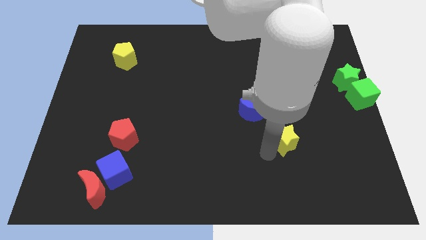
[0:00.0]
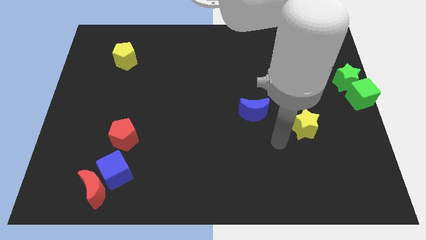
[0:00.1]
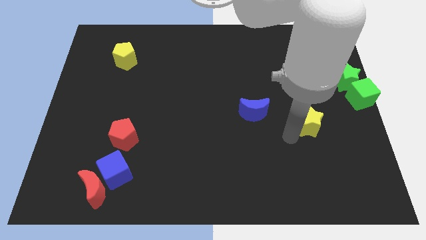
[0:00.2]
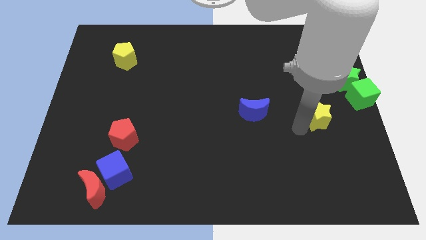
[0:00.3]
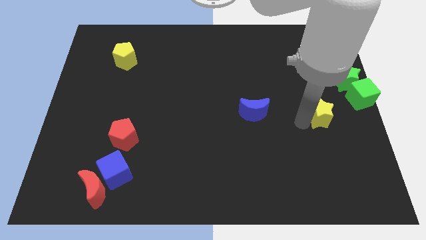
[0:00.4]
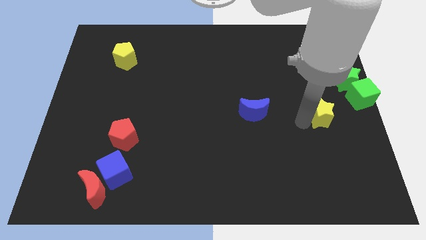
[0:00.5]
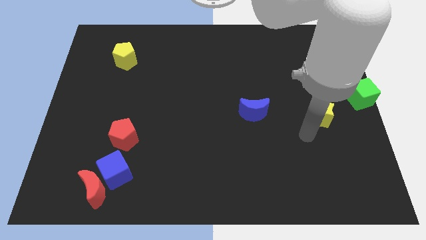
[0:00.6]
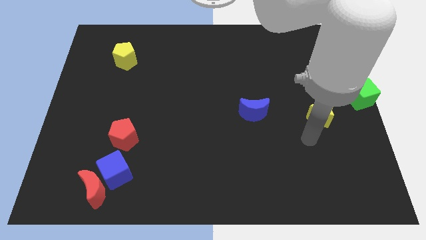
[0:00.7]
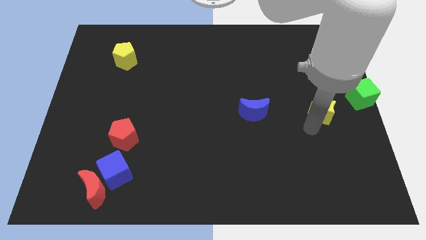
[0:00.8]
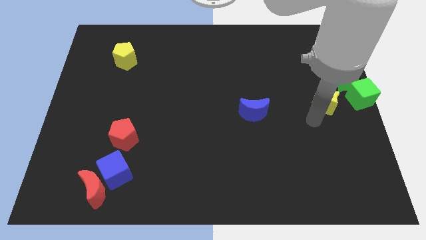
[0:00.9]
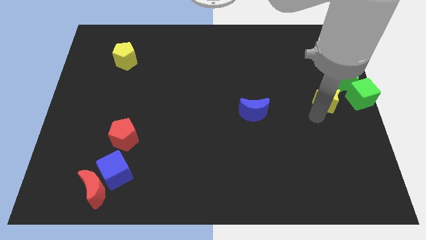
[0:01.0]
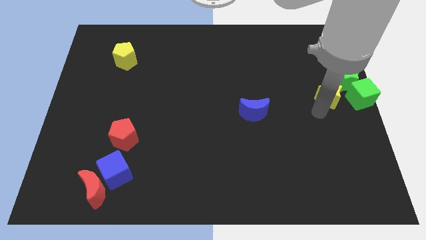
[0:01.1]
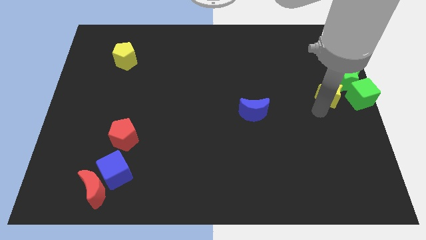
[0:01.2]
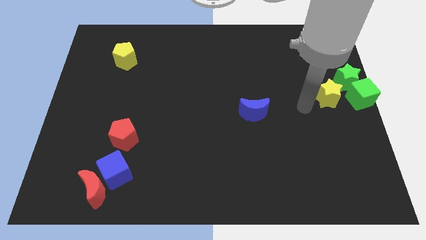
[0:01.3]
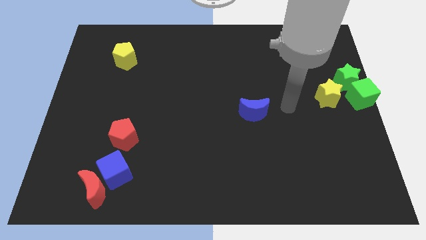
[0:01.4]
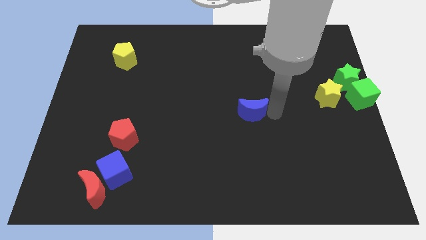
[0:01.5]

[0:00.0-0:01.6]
move the yellow star to the right of the green cube

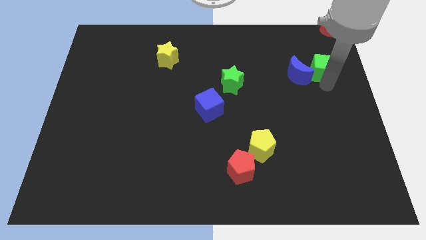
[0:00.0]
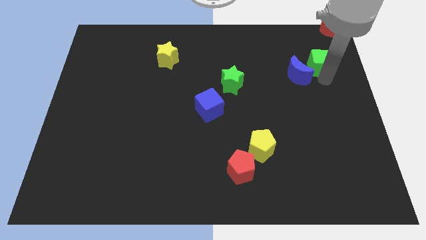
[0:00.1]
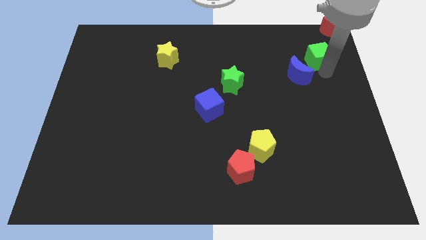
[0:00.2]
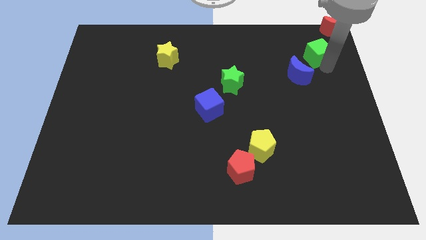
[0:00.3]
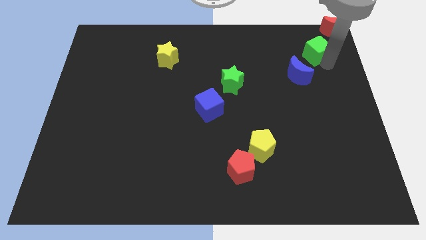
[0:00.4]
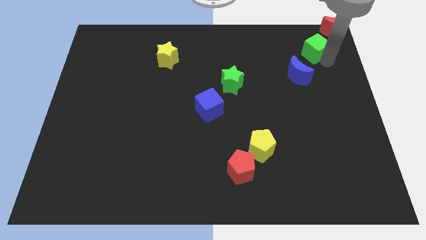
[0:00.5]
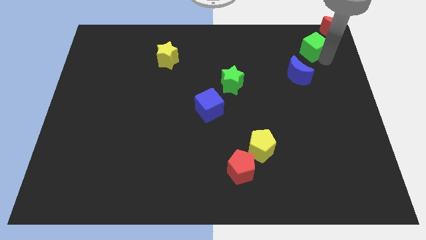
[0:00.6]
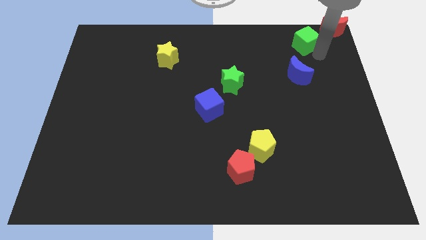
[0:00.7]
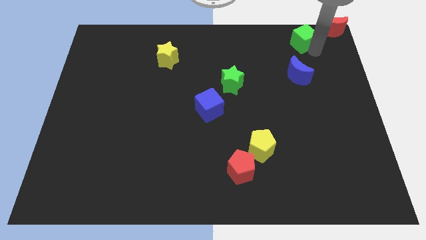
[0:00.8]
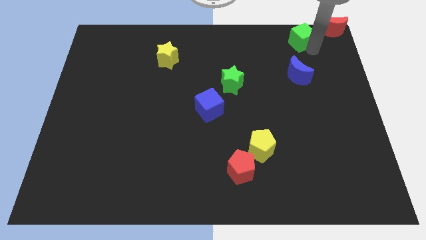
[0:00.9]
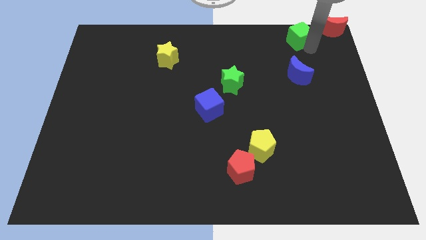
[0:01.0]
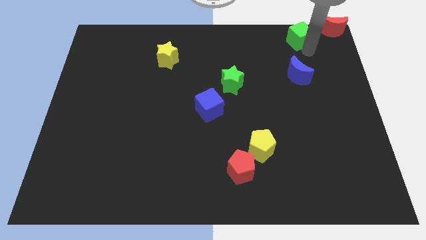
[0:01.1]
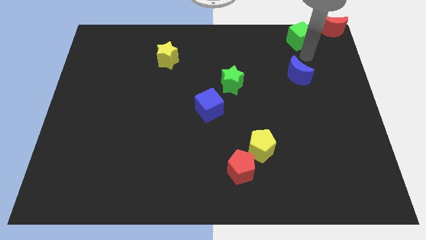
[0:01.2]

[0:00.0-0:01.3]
separate green cube from the blue moon

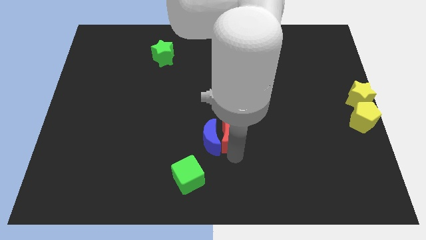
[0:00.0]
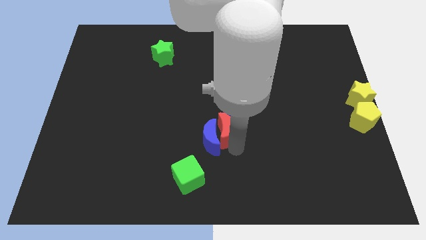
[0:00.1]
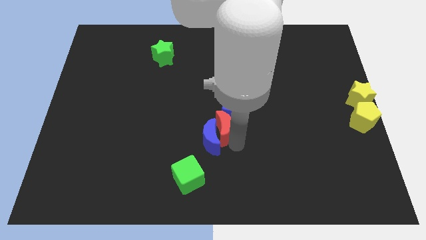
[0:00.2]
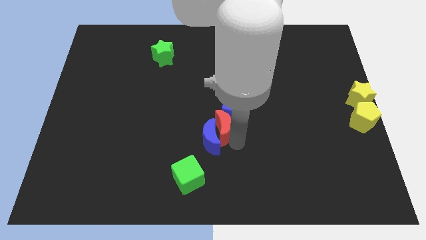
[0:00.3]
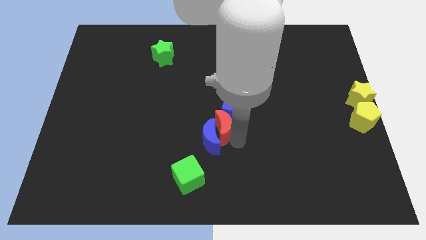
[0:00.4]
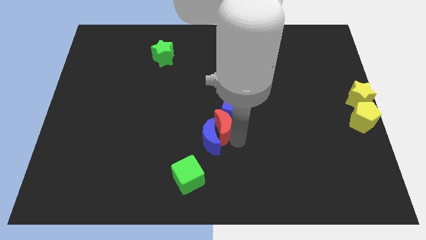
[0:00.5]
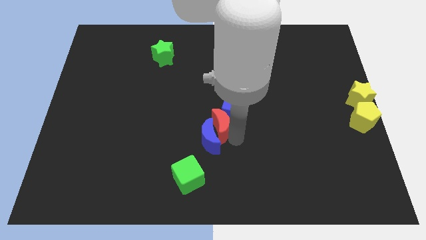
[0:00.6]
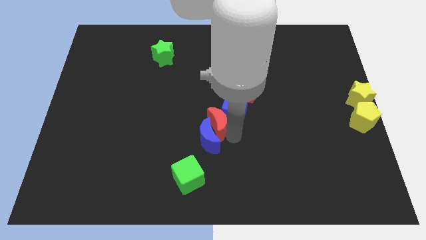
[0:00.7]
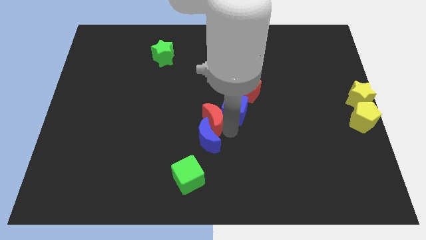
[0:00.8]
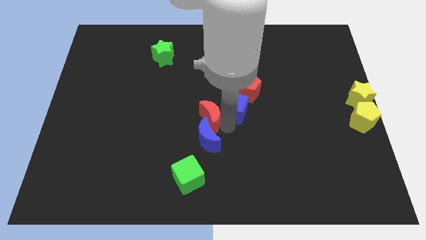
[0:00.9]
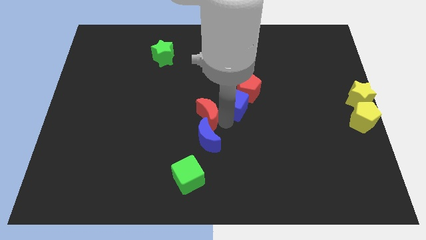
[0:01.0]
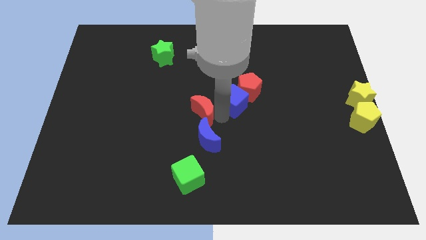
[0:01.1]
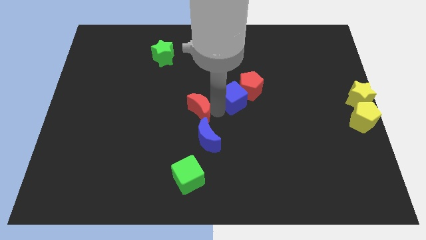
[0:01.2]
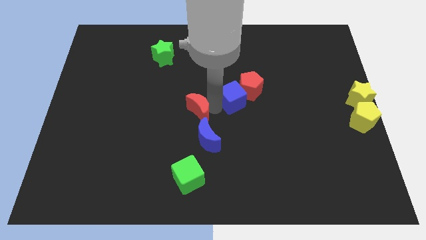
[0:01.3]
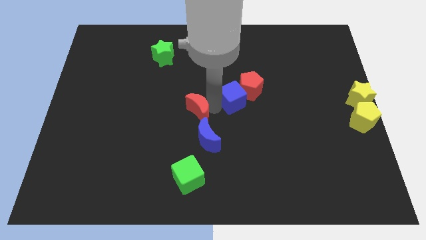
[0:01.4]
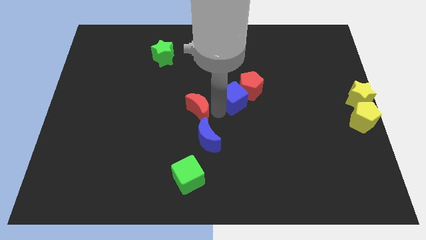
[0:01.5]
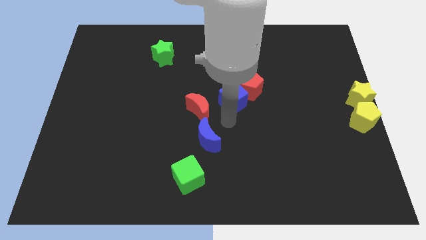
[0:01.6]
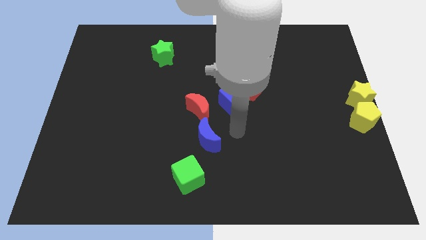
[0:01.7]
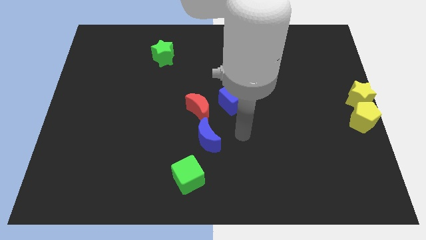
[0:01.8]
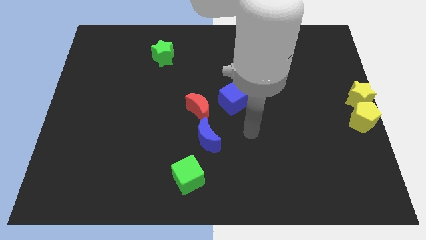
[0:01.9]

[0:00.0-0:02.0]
separate red moon from the blue cube

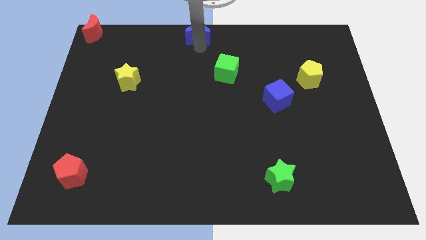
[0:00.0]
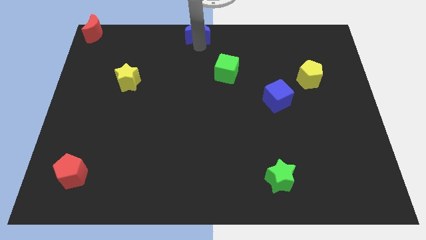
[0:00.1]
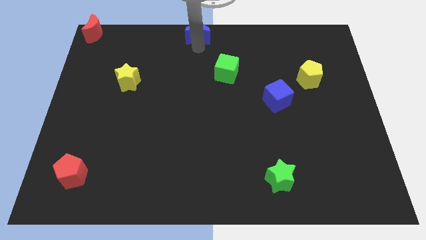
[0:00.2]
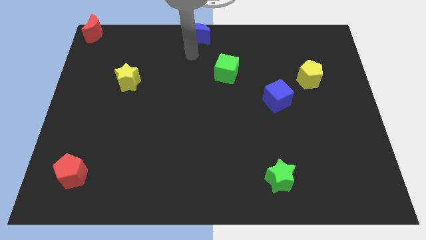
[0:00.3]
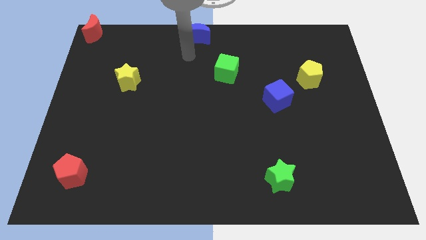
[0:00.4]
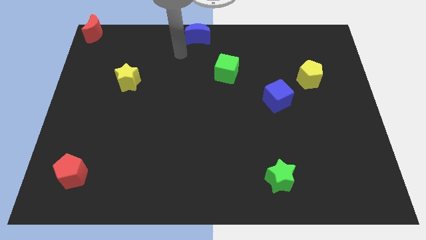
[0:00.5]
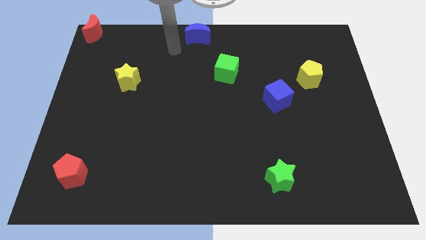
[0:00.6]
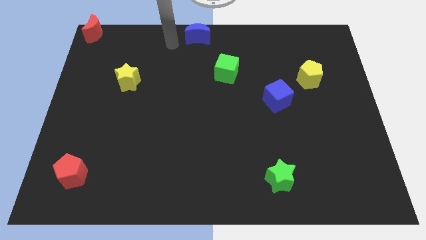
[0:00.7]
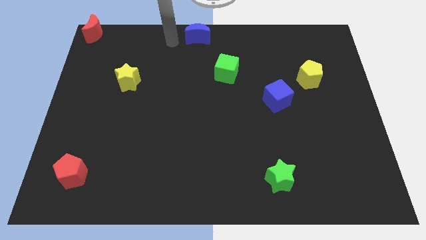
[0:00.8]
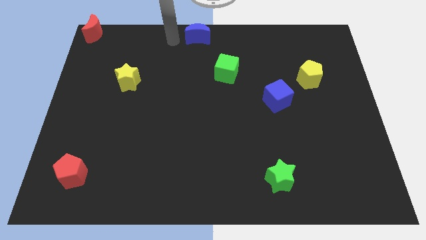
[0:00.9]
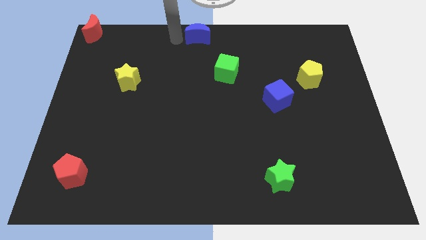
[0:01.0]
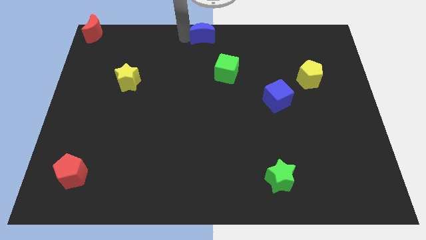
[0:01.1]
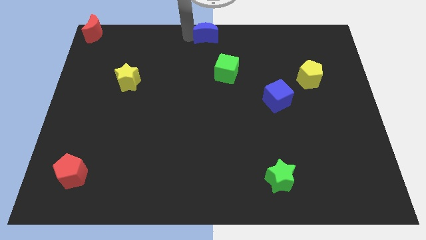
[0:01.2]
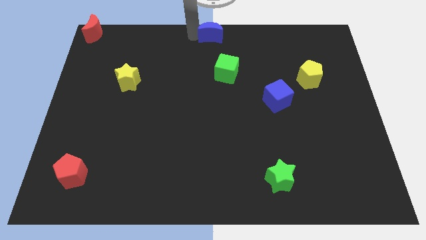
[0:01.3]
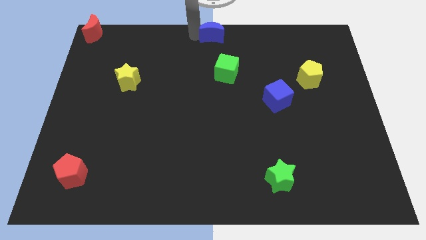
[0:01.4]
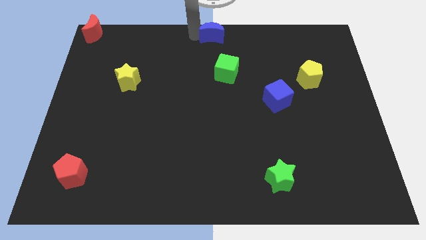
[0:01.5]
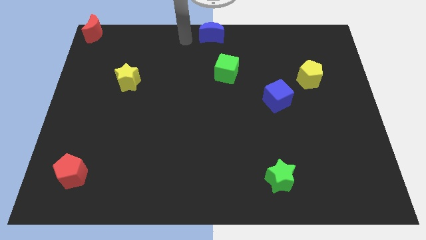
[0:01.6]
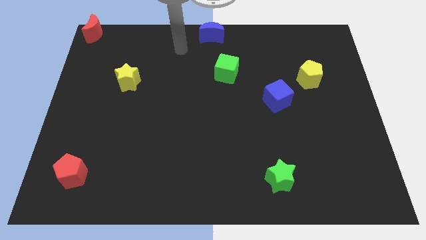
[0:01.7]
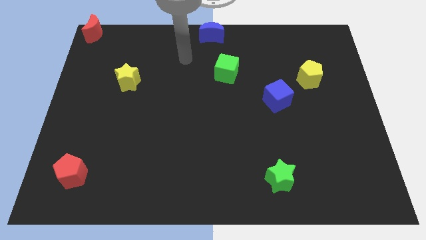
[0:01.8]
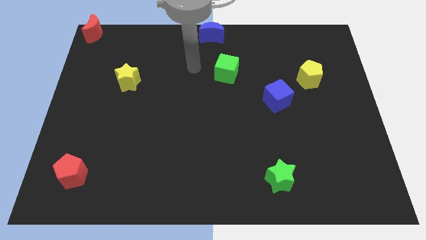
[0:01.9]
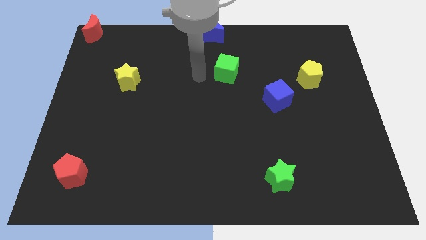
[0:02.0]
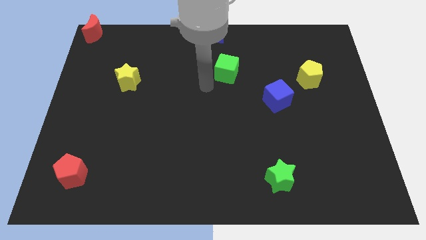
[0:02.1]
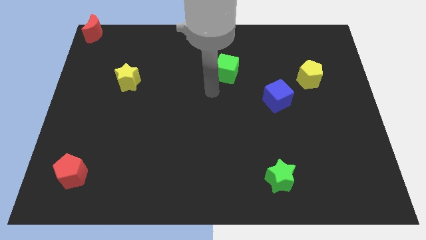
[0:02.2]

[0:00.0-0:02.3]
place the blue moon above the green block

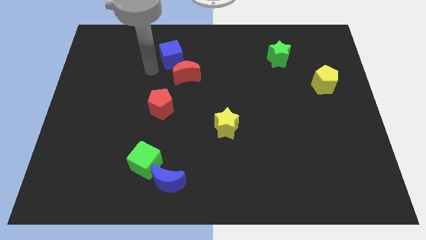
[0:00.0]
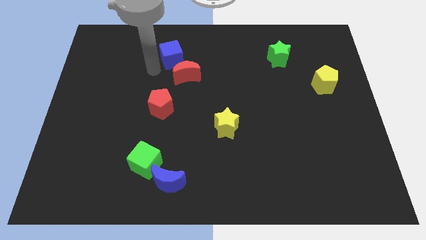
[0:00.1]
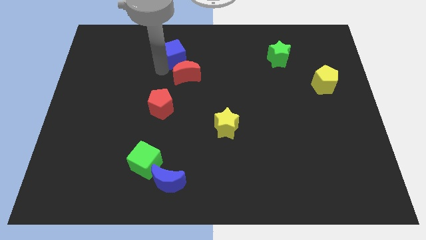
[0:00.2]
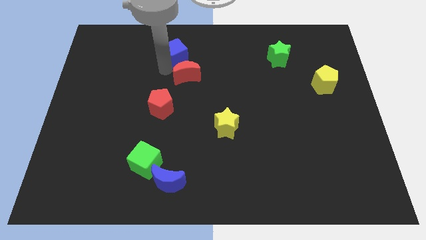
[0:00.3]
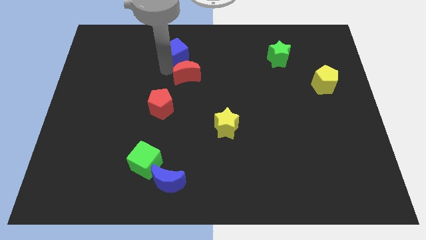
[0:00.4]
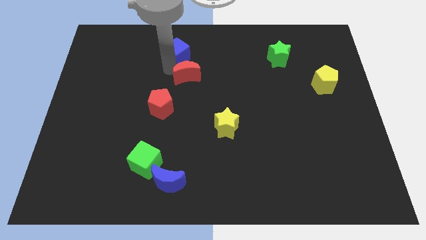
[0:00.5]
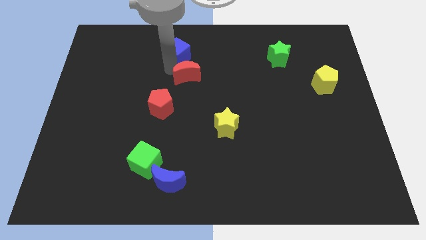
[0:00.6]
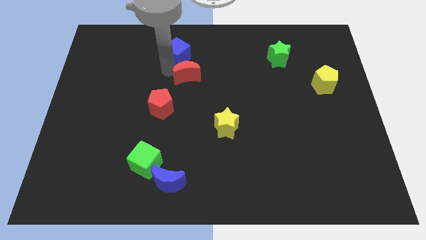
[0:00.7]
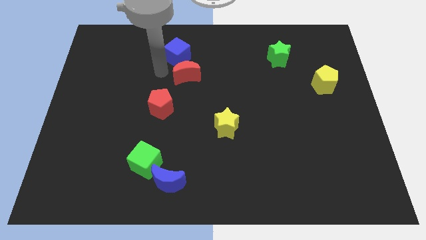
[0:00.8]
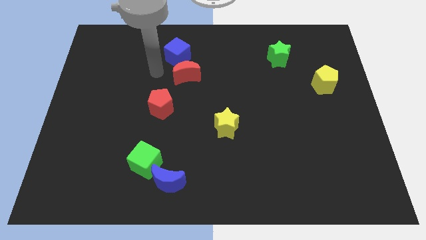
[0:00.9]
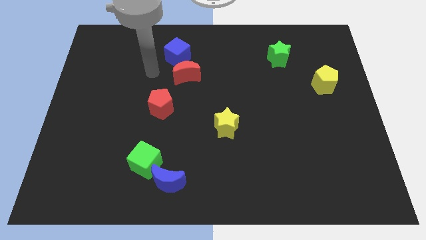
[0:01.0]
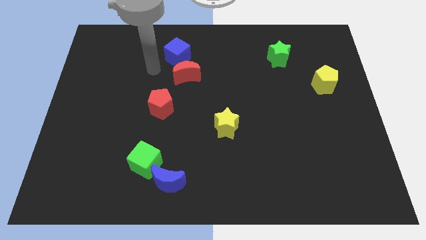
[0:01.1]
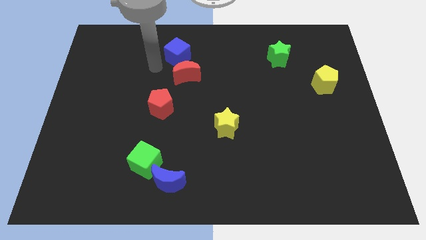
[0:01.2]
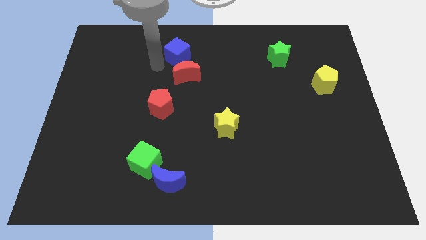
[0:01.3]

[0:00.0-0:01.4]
move the blue cube to the top of the red crescent

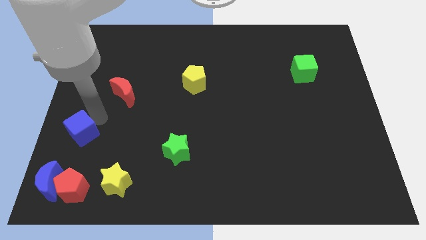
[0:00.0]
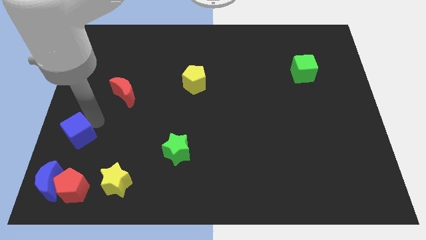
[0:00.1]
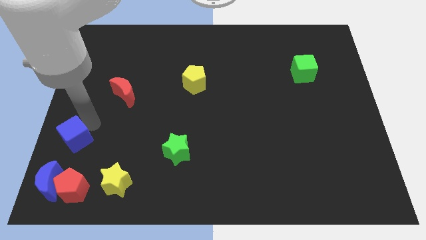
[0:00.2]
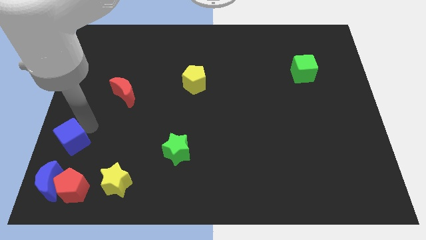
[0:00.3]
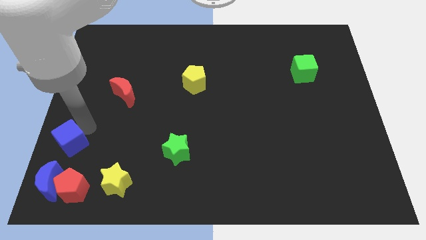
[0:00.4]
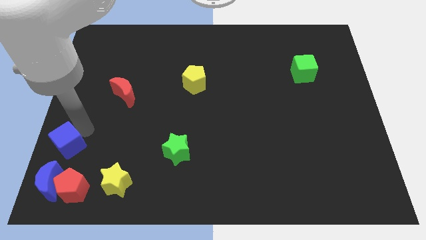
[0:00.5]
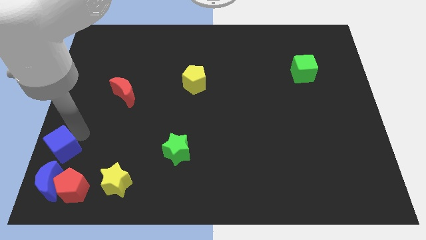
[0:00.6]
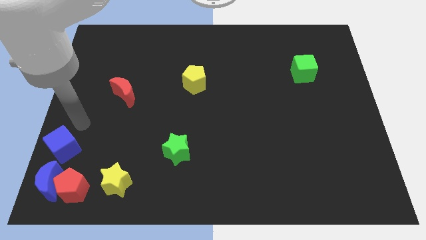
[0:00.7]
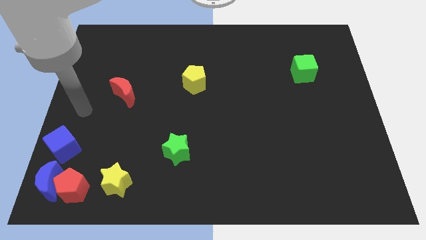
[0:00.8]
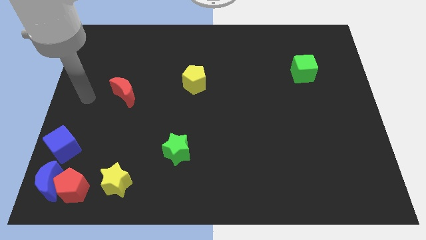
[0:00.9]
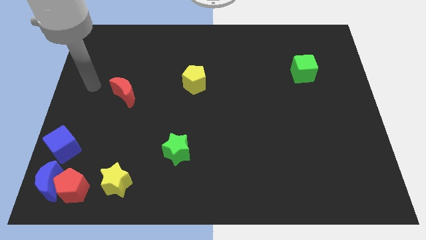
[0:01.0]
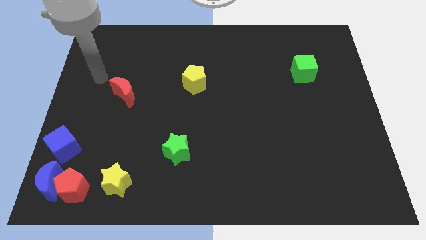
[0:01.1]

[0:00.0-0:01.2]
place the blue cube above the blue crescent
